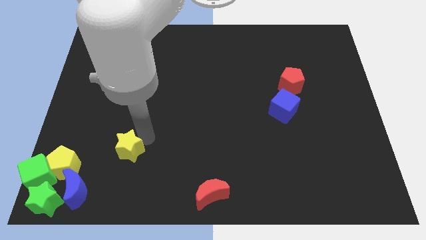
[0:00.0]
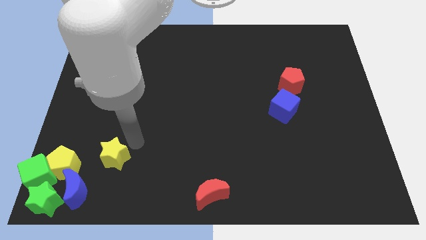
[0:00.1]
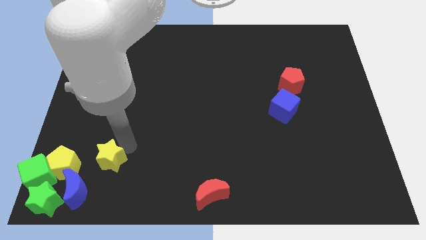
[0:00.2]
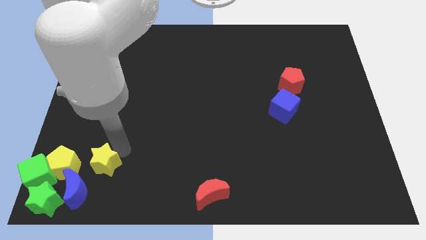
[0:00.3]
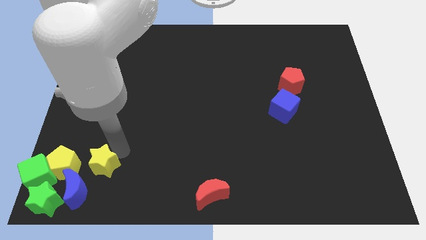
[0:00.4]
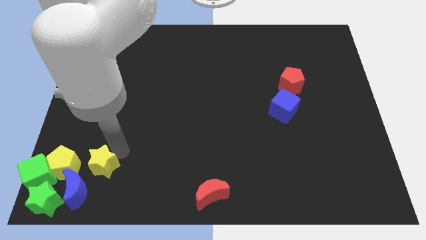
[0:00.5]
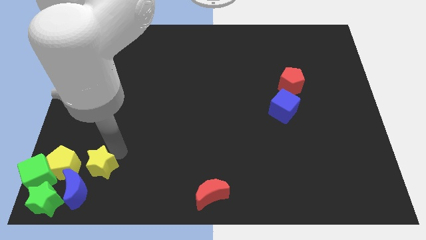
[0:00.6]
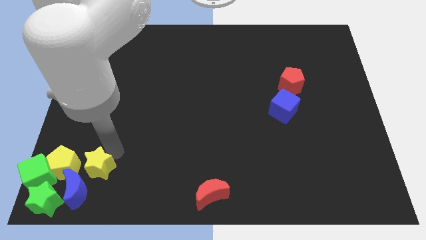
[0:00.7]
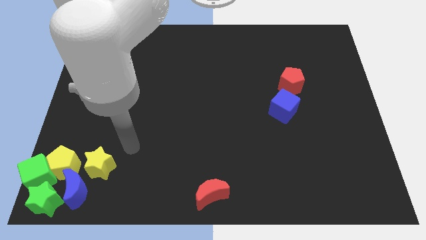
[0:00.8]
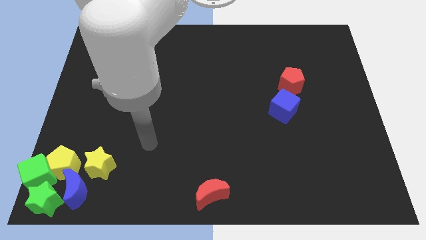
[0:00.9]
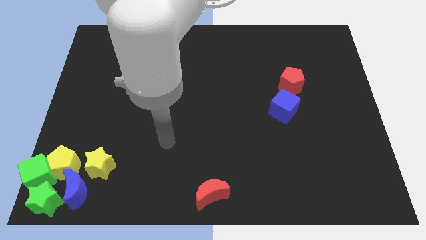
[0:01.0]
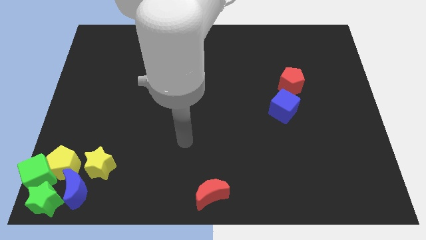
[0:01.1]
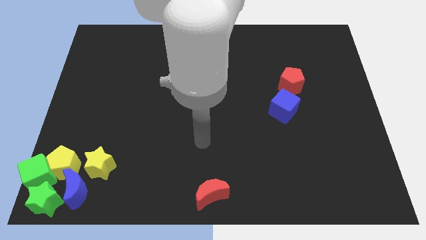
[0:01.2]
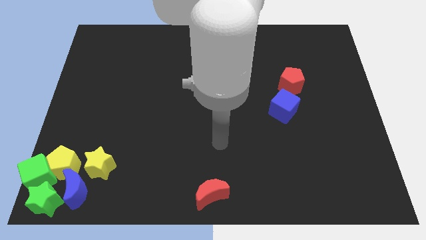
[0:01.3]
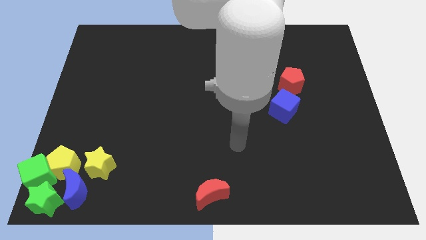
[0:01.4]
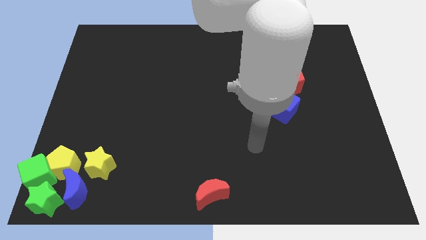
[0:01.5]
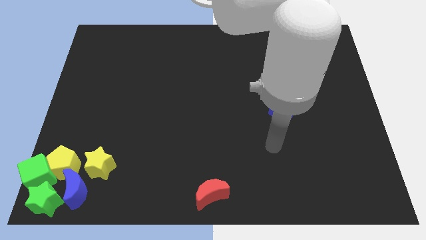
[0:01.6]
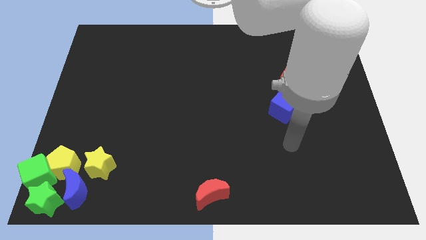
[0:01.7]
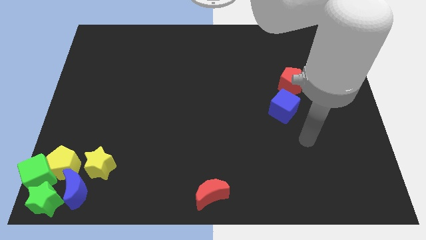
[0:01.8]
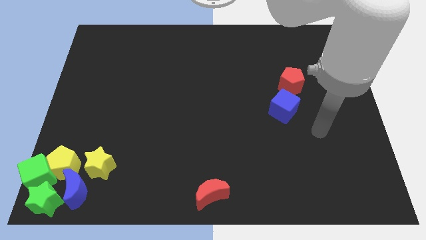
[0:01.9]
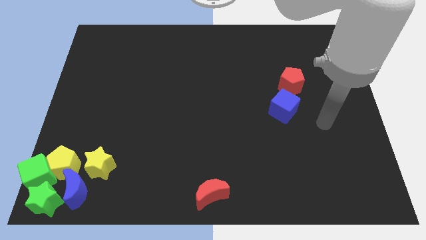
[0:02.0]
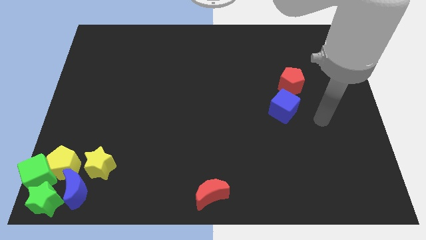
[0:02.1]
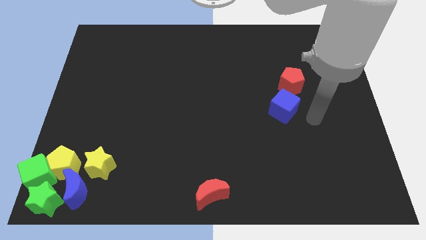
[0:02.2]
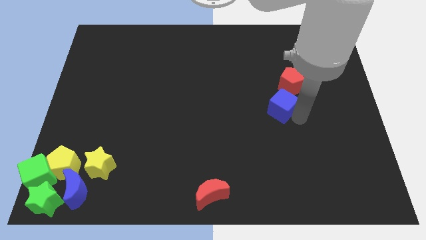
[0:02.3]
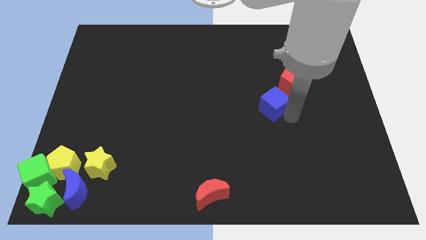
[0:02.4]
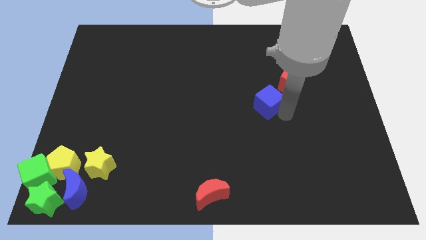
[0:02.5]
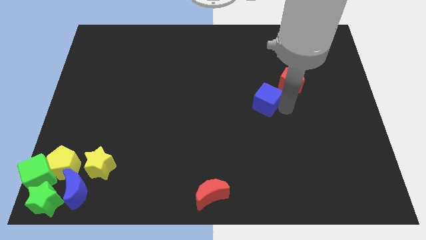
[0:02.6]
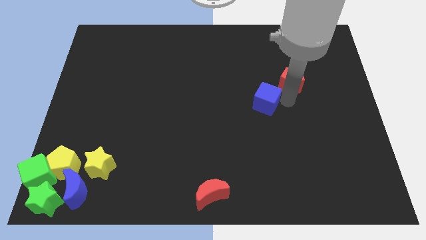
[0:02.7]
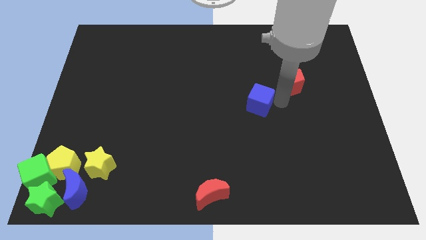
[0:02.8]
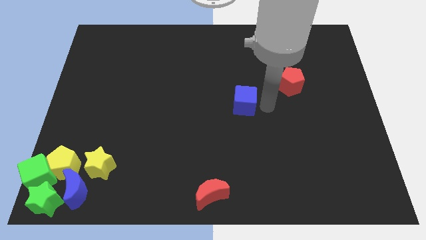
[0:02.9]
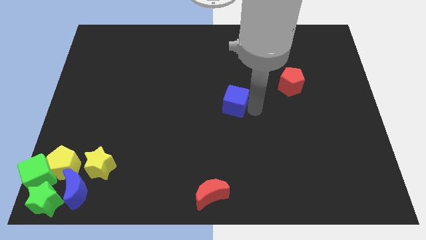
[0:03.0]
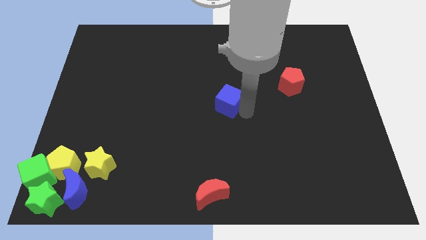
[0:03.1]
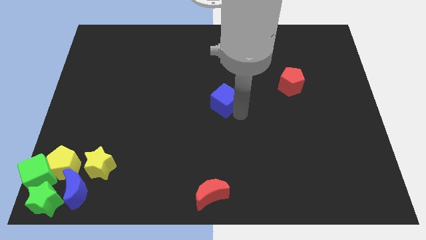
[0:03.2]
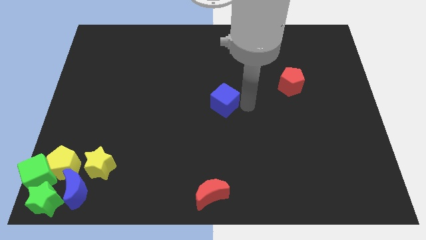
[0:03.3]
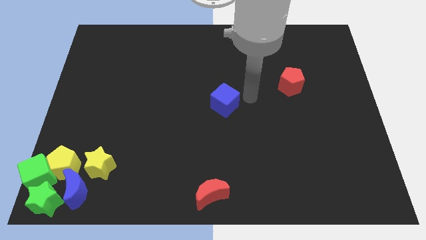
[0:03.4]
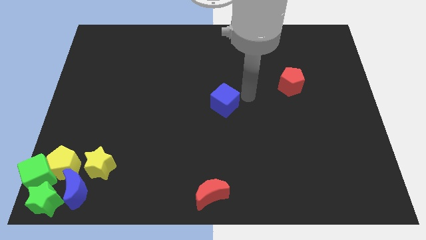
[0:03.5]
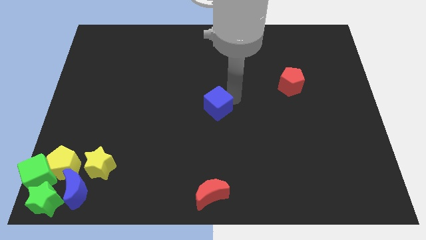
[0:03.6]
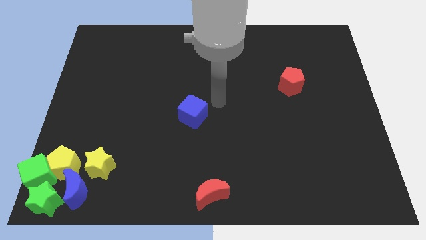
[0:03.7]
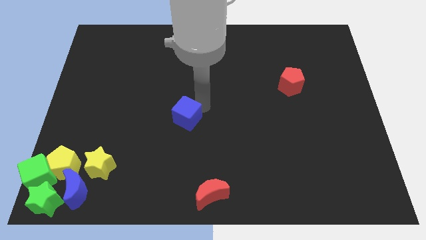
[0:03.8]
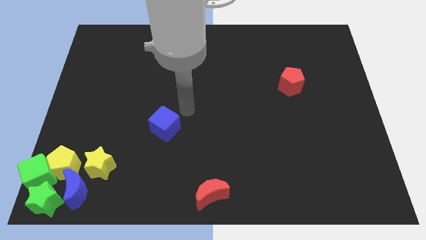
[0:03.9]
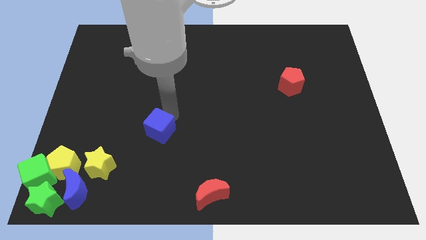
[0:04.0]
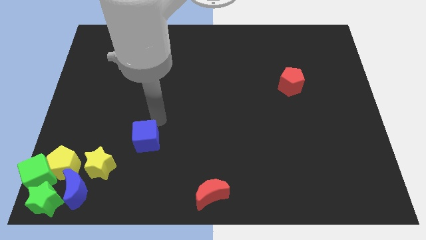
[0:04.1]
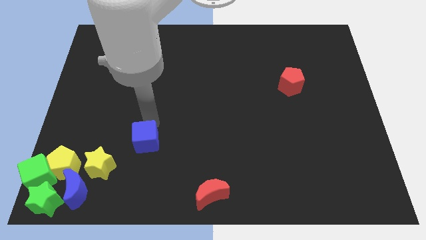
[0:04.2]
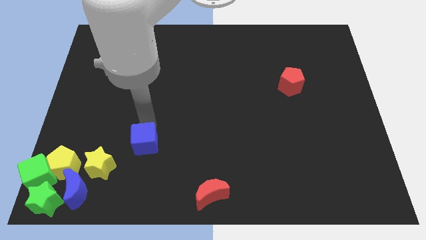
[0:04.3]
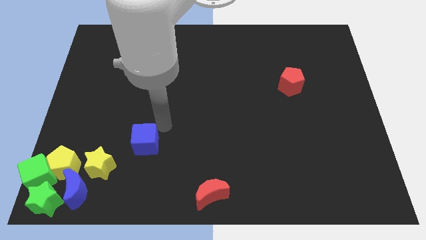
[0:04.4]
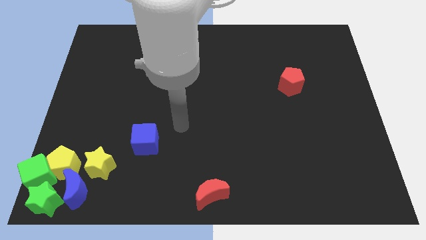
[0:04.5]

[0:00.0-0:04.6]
move the blue cube towards the yellow star

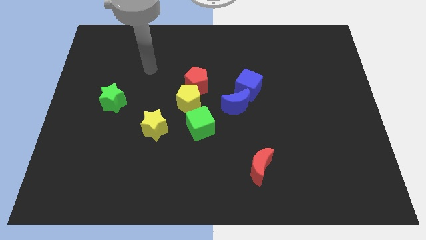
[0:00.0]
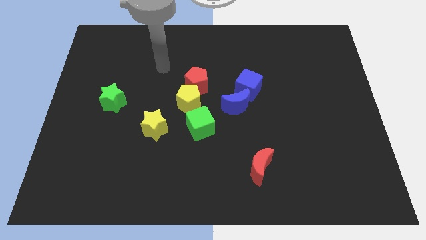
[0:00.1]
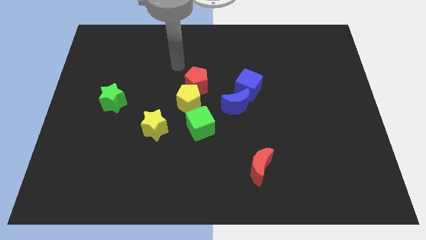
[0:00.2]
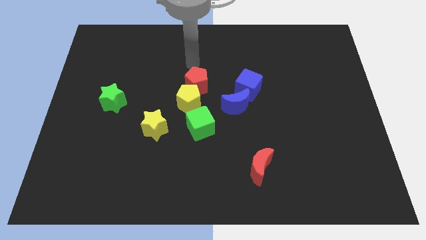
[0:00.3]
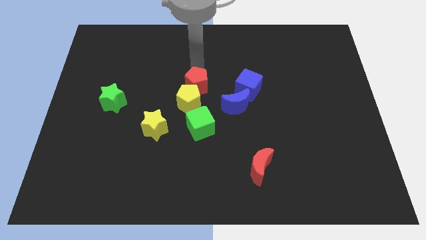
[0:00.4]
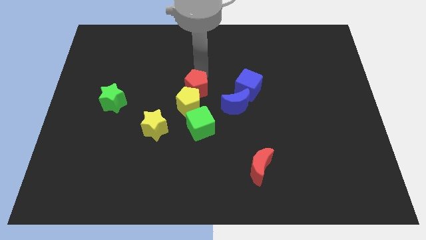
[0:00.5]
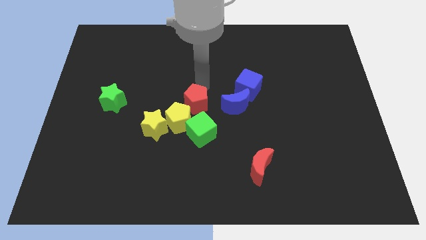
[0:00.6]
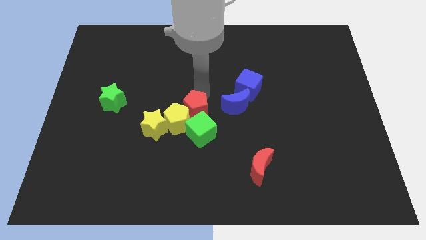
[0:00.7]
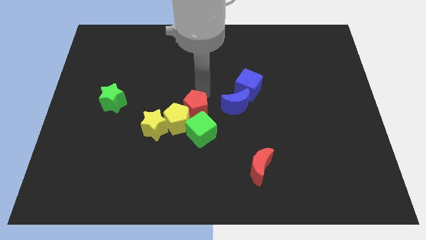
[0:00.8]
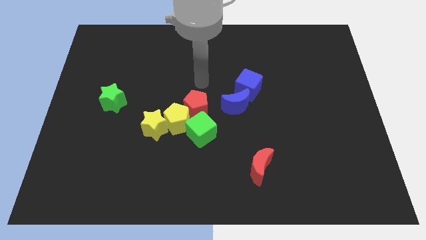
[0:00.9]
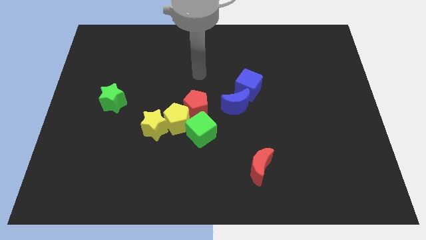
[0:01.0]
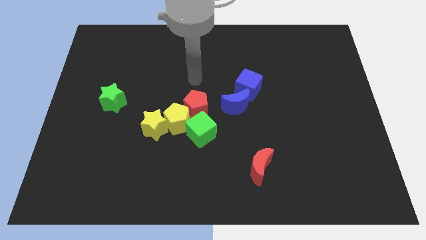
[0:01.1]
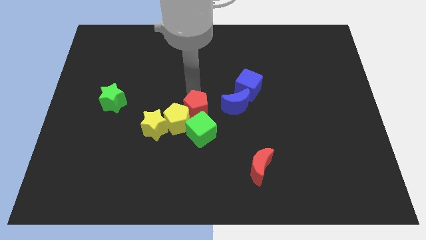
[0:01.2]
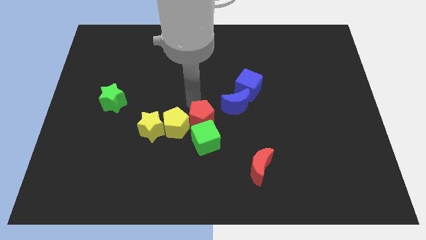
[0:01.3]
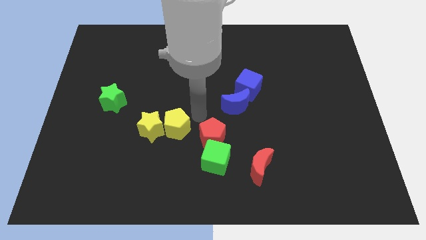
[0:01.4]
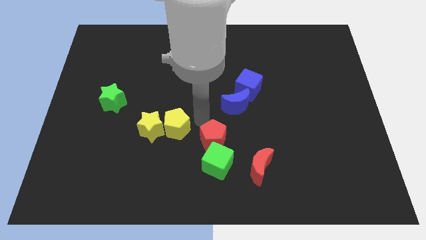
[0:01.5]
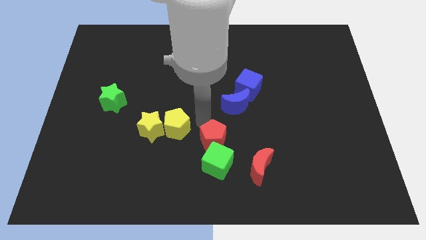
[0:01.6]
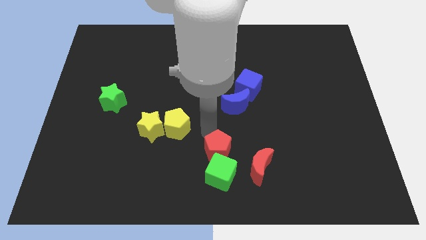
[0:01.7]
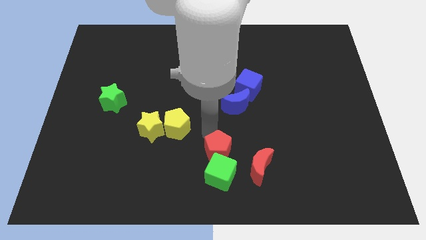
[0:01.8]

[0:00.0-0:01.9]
push the red pentagon in to the green cube

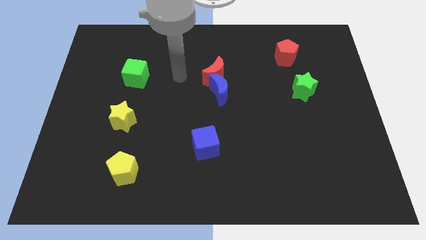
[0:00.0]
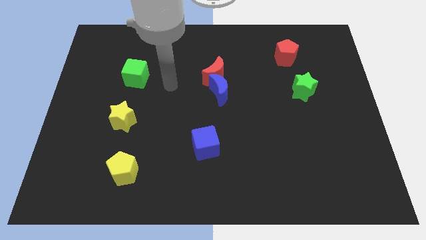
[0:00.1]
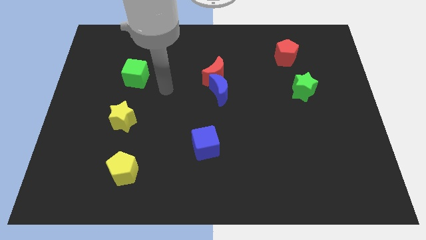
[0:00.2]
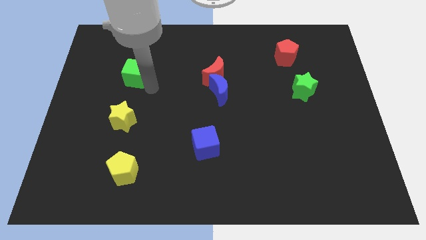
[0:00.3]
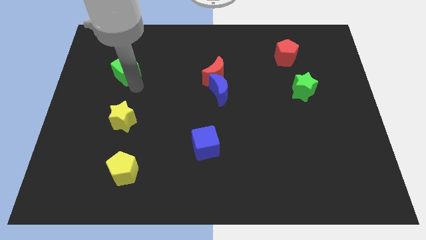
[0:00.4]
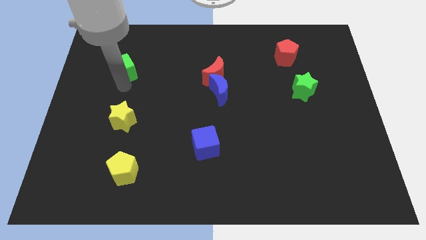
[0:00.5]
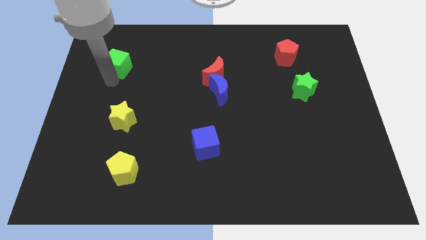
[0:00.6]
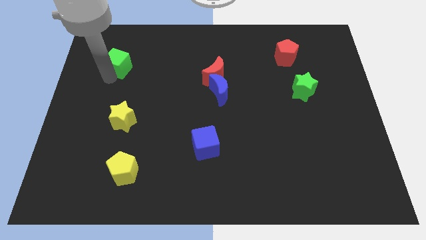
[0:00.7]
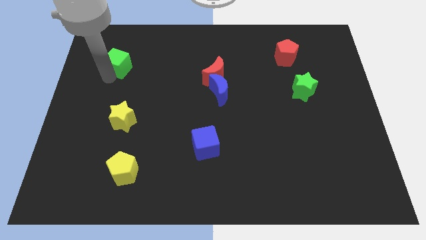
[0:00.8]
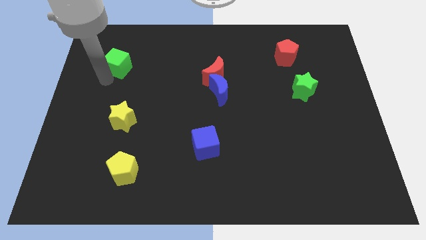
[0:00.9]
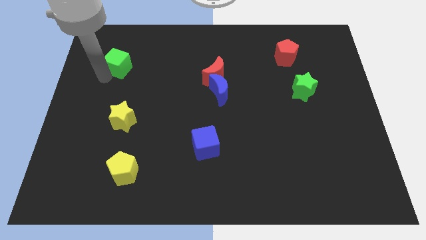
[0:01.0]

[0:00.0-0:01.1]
push the green cube towards the left side of the board

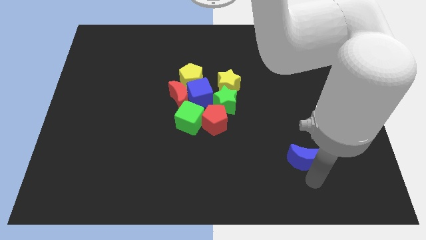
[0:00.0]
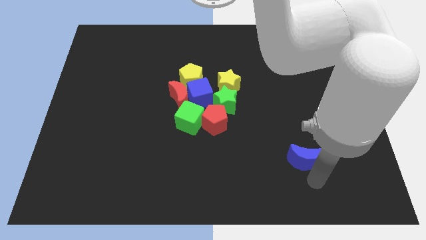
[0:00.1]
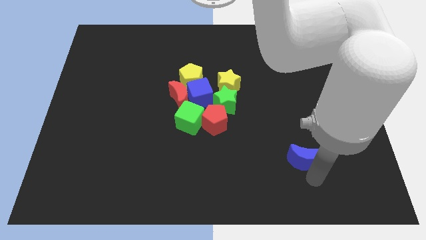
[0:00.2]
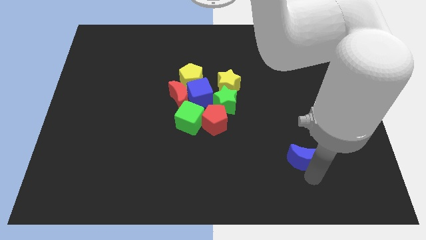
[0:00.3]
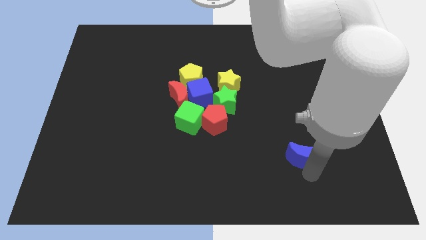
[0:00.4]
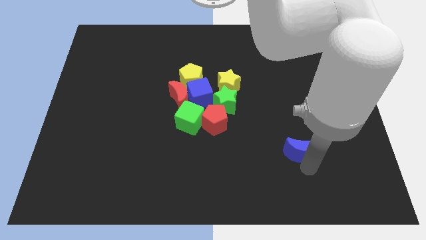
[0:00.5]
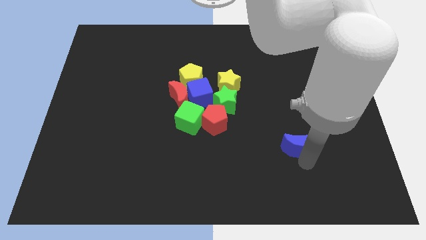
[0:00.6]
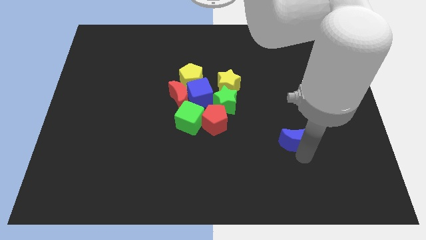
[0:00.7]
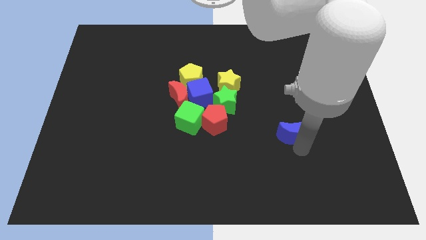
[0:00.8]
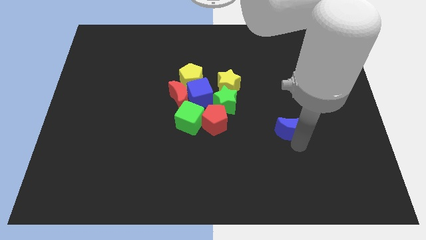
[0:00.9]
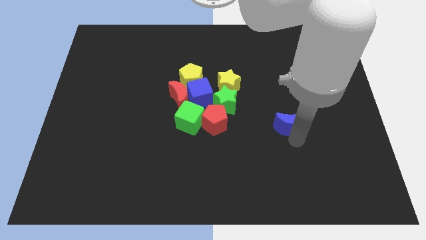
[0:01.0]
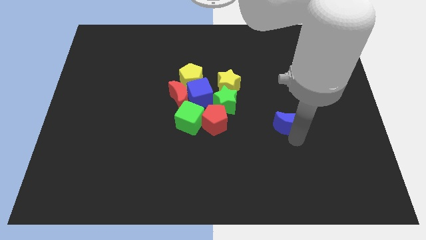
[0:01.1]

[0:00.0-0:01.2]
move the blue moon parallel to the red pentagon

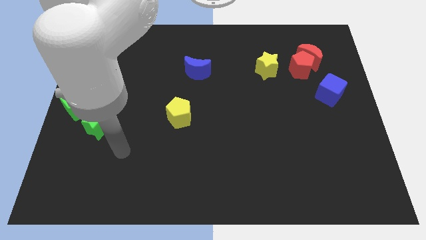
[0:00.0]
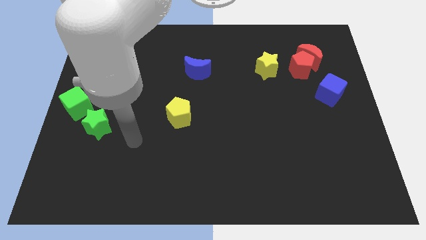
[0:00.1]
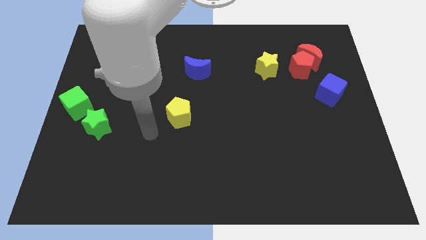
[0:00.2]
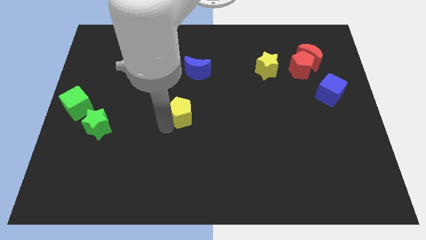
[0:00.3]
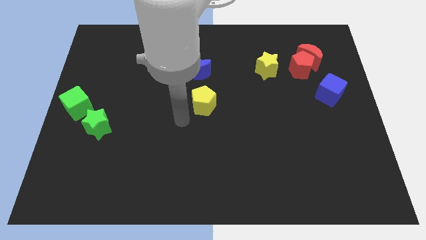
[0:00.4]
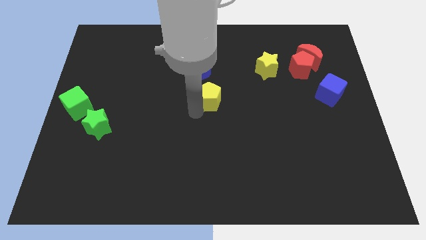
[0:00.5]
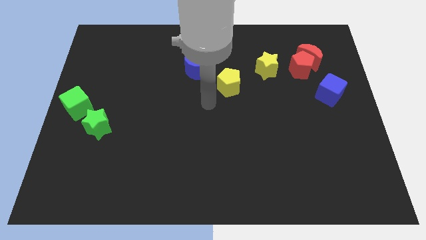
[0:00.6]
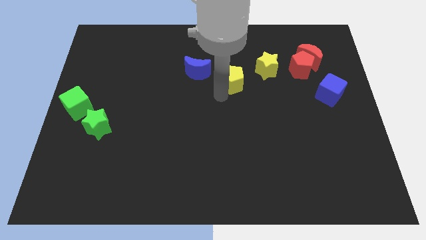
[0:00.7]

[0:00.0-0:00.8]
place the yellow pentagon diagonally towards the yellow star
